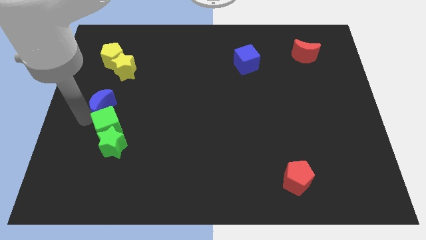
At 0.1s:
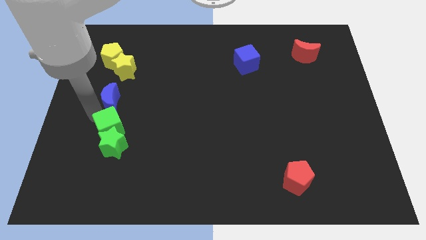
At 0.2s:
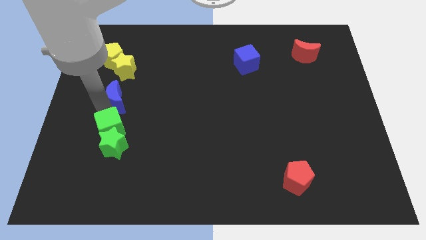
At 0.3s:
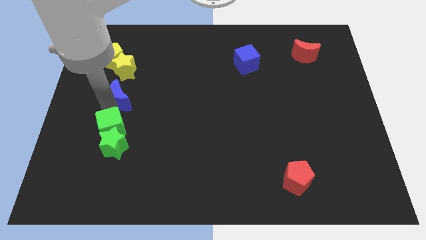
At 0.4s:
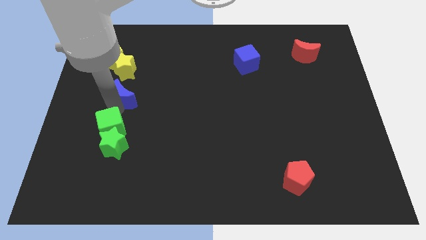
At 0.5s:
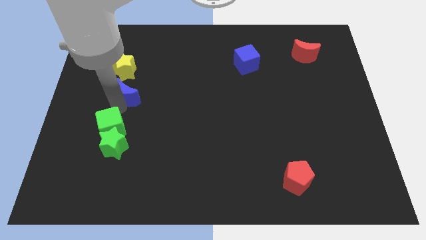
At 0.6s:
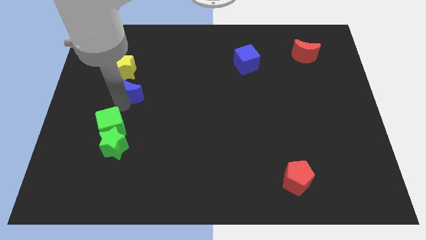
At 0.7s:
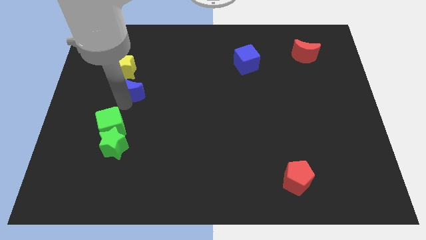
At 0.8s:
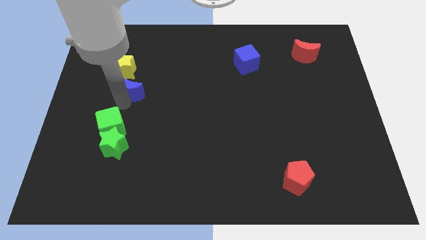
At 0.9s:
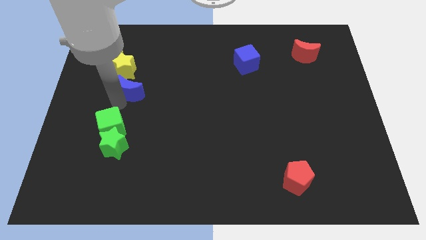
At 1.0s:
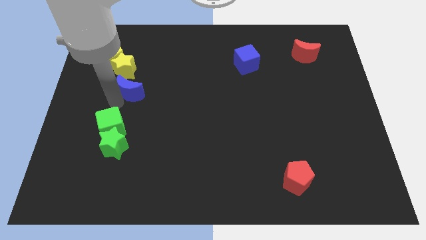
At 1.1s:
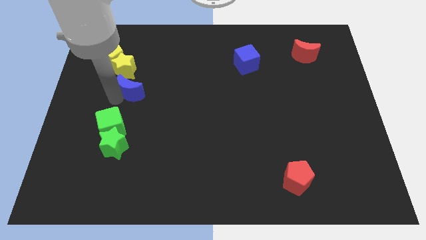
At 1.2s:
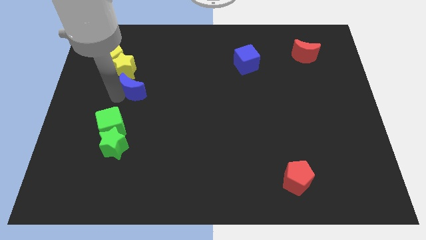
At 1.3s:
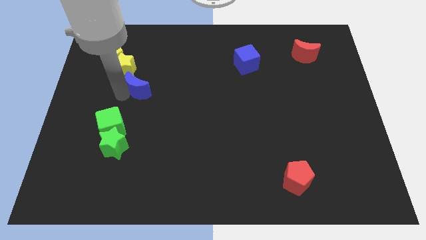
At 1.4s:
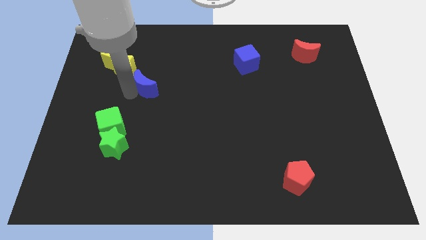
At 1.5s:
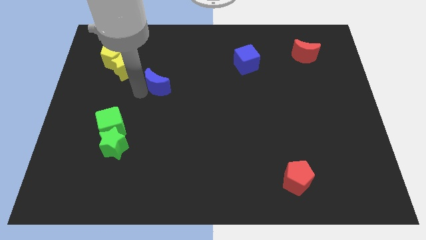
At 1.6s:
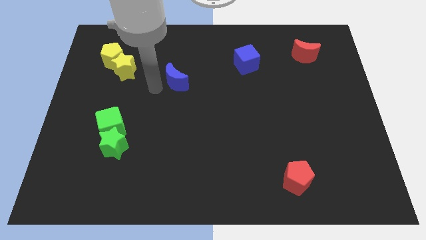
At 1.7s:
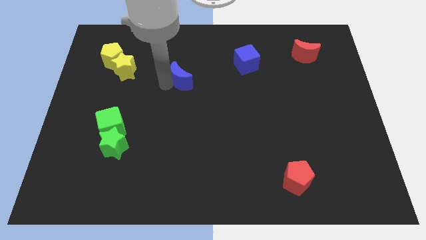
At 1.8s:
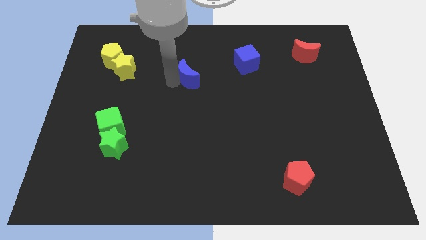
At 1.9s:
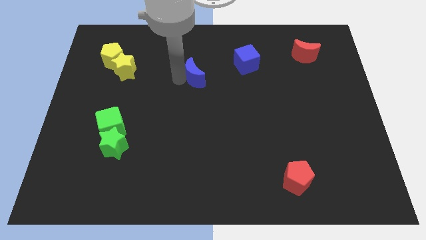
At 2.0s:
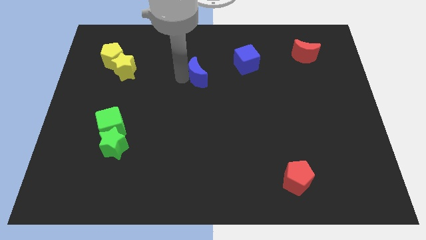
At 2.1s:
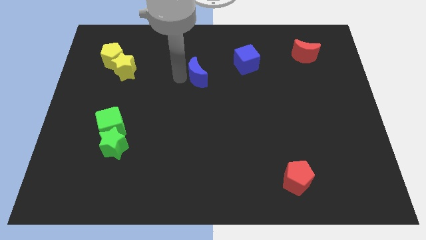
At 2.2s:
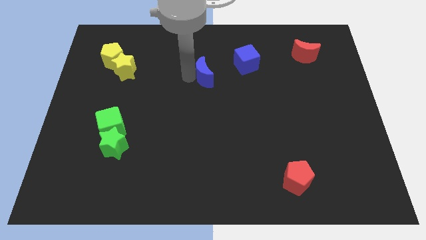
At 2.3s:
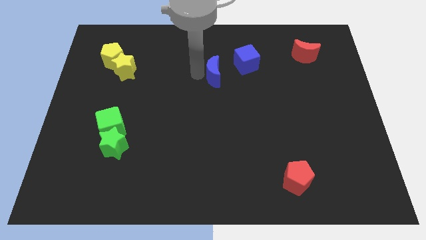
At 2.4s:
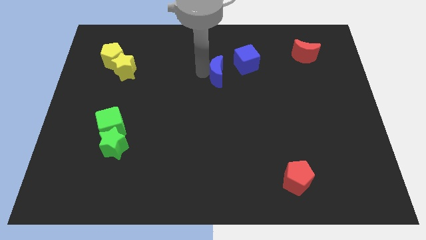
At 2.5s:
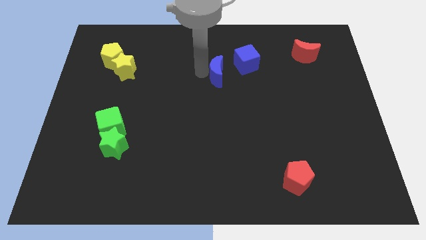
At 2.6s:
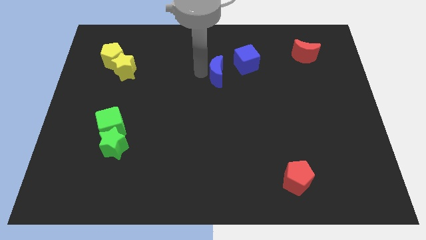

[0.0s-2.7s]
place the blue moon left to the blue cube

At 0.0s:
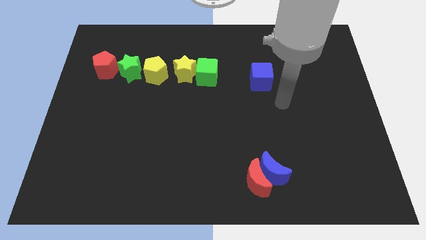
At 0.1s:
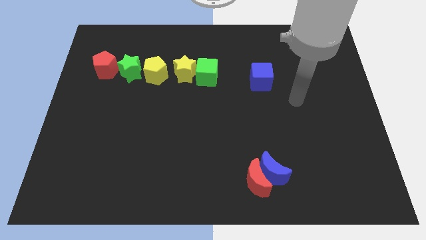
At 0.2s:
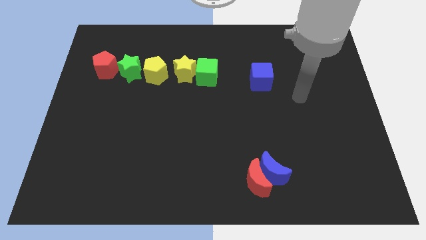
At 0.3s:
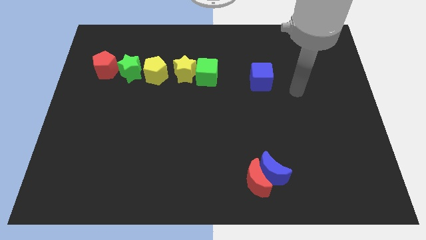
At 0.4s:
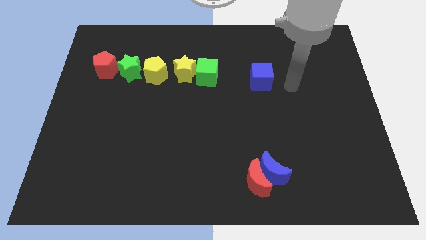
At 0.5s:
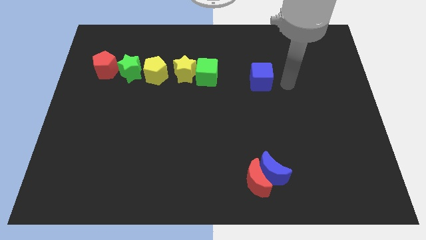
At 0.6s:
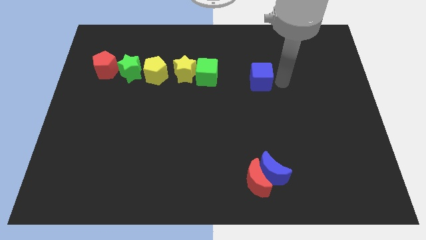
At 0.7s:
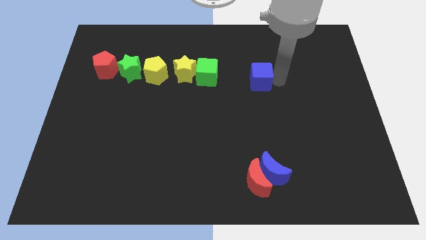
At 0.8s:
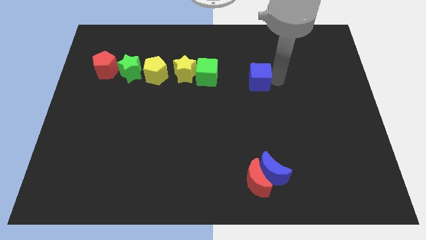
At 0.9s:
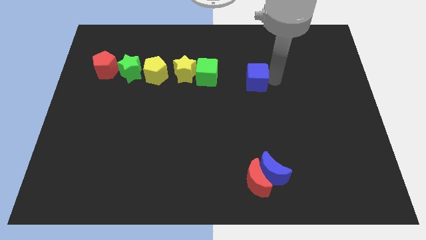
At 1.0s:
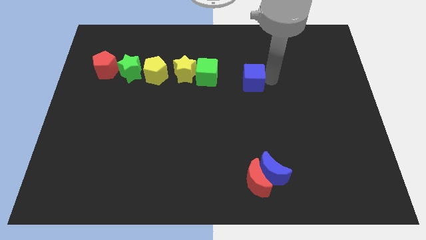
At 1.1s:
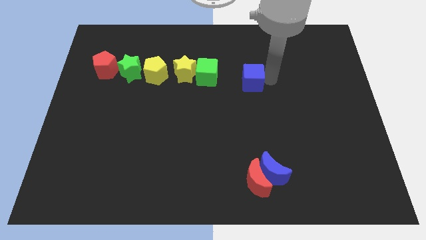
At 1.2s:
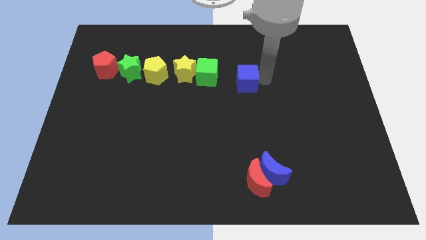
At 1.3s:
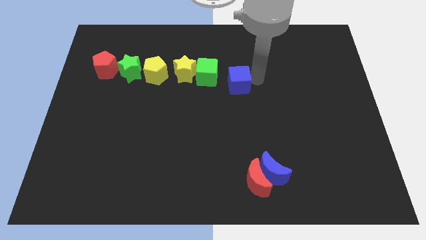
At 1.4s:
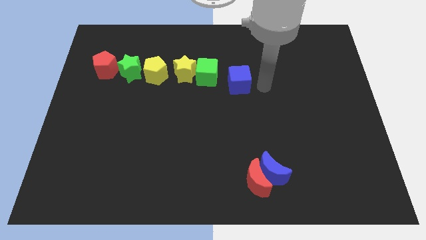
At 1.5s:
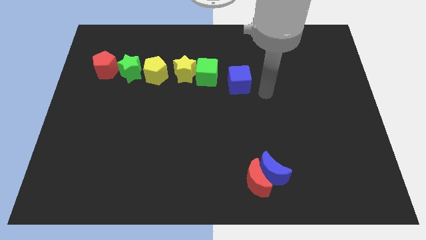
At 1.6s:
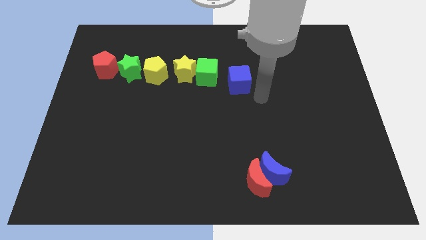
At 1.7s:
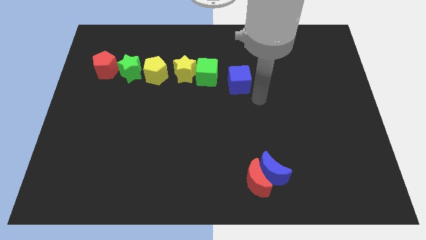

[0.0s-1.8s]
push the blue cube slightly towards the green cube

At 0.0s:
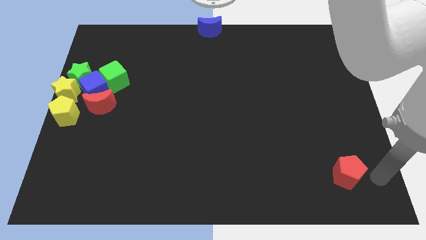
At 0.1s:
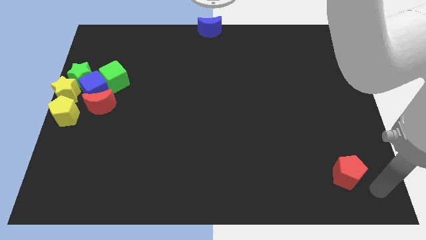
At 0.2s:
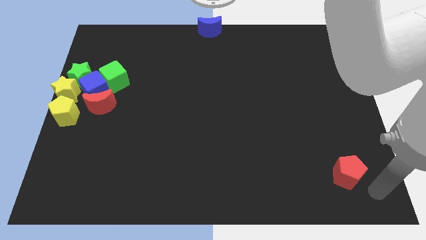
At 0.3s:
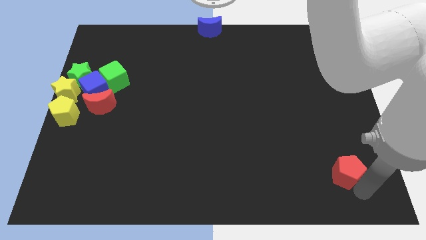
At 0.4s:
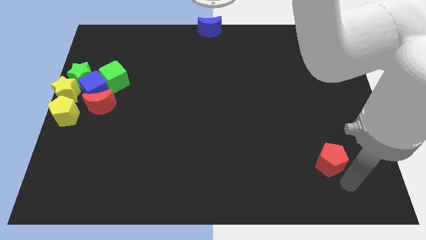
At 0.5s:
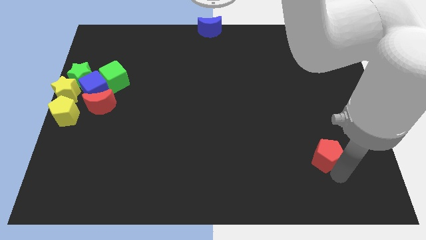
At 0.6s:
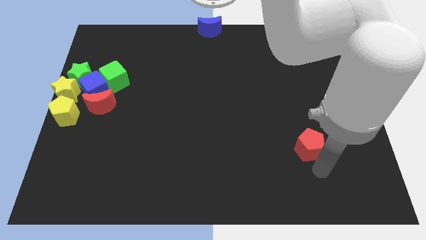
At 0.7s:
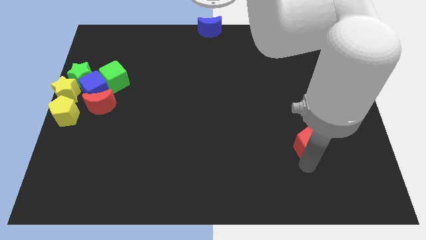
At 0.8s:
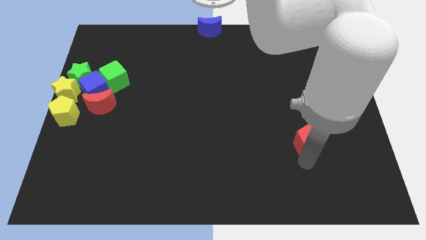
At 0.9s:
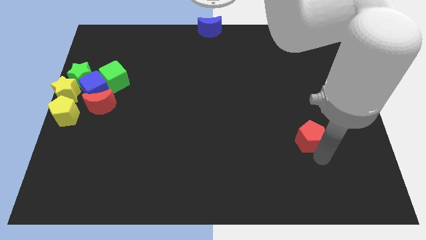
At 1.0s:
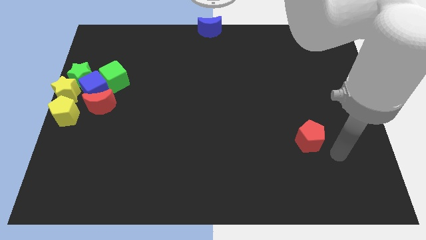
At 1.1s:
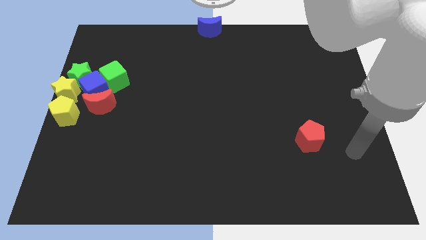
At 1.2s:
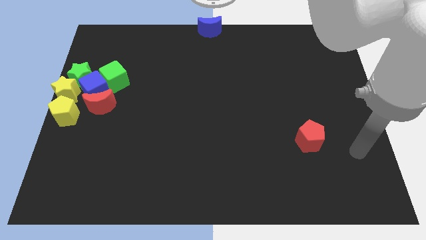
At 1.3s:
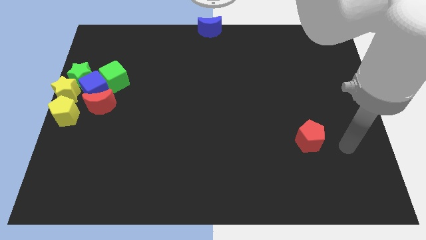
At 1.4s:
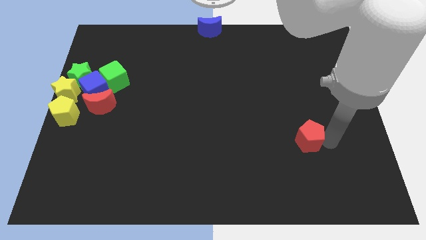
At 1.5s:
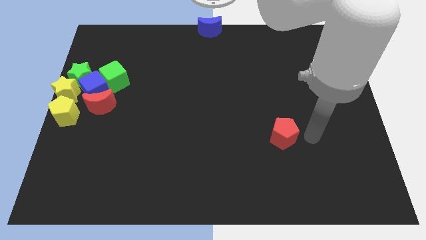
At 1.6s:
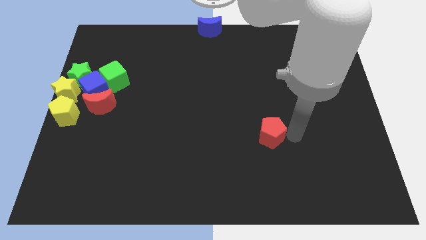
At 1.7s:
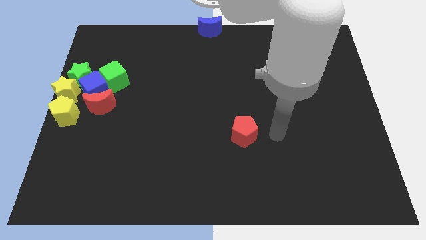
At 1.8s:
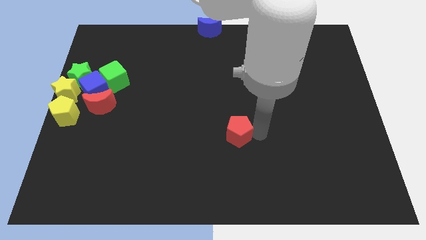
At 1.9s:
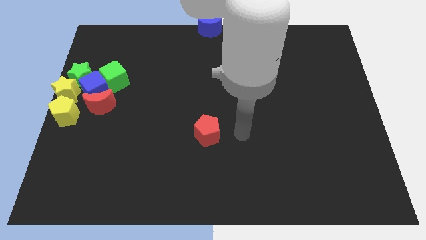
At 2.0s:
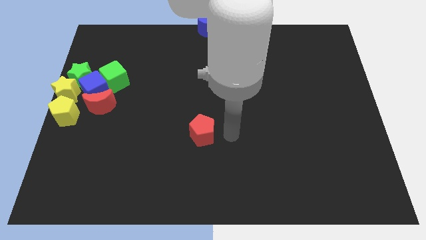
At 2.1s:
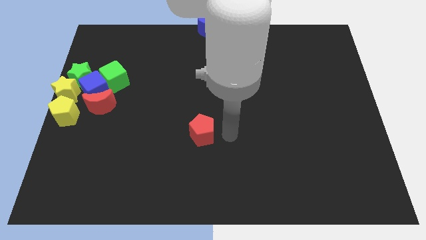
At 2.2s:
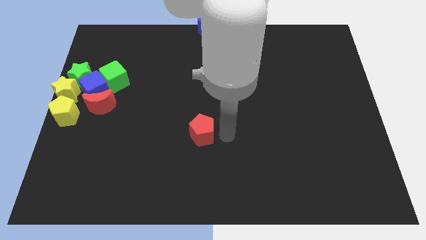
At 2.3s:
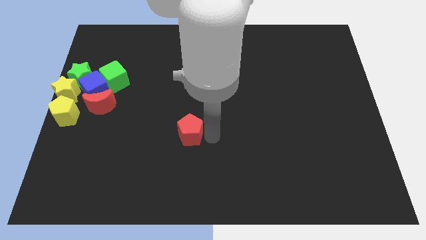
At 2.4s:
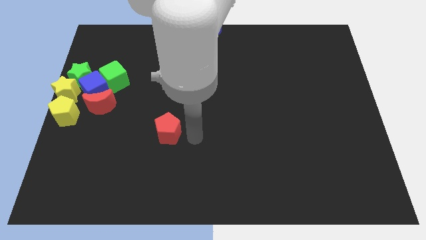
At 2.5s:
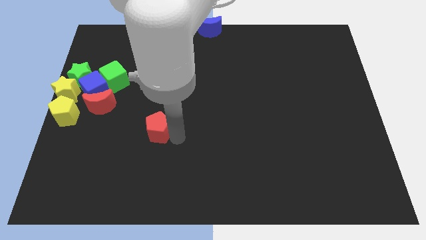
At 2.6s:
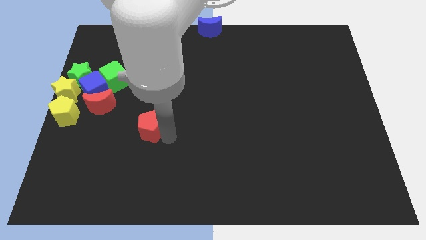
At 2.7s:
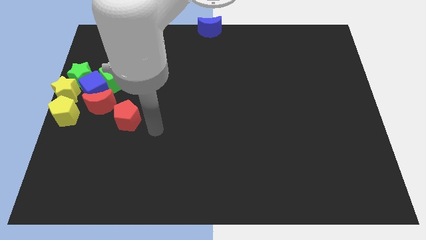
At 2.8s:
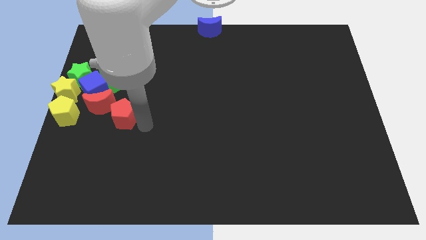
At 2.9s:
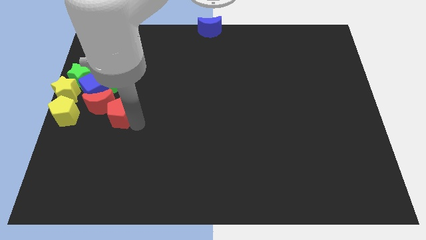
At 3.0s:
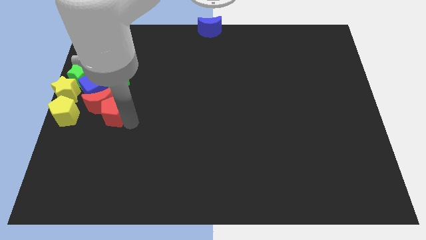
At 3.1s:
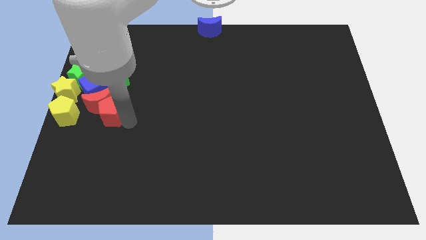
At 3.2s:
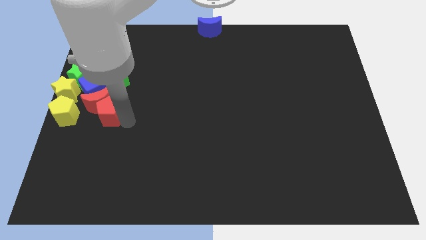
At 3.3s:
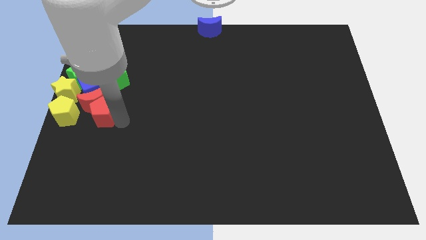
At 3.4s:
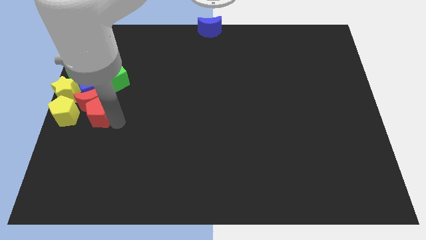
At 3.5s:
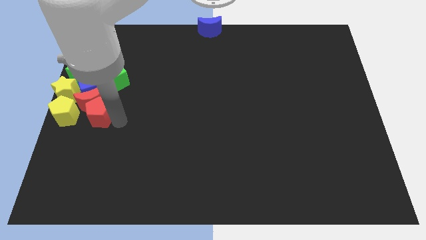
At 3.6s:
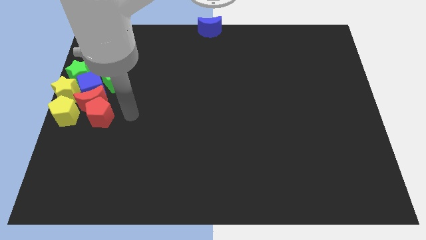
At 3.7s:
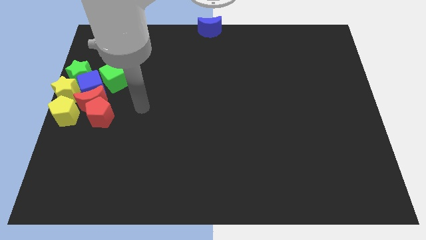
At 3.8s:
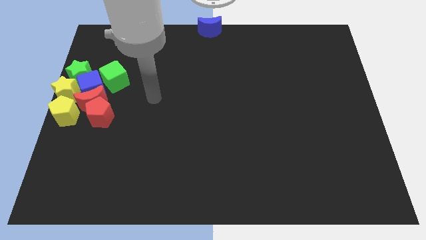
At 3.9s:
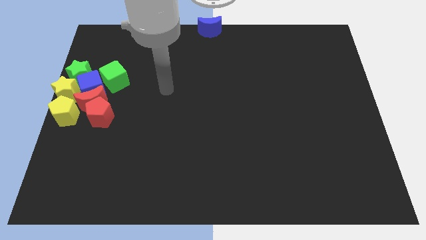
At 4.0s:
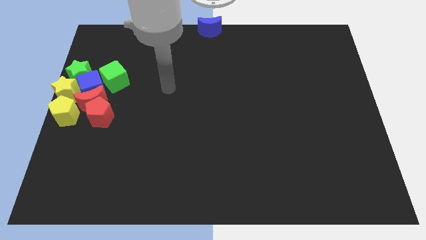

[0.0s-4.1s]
push the red pentagon into the red moon

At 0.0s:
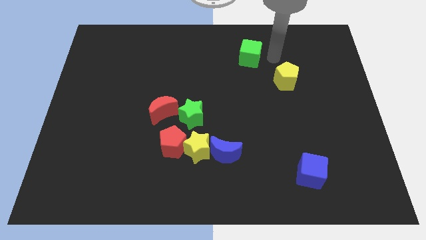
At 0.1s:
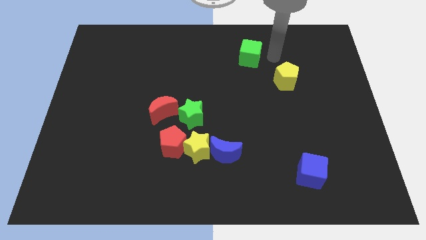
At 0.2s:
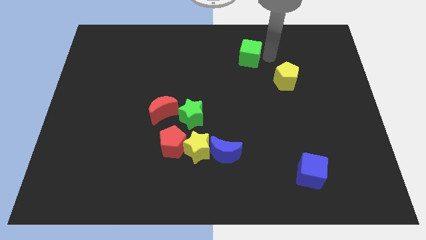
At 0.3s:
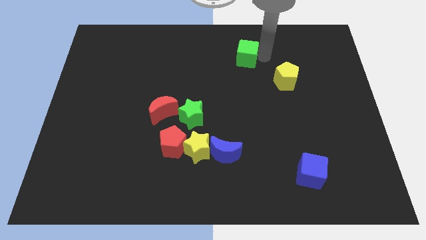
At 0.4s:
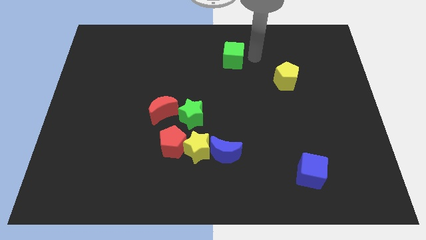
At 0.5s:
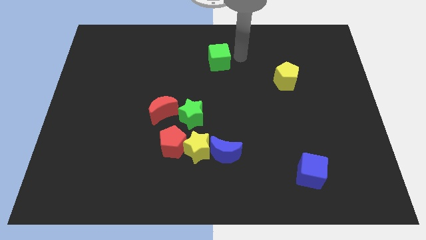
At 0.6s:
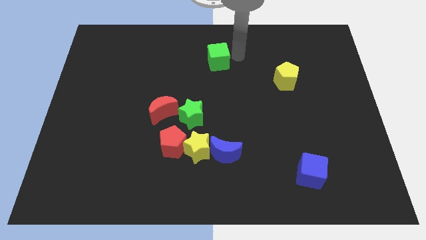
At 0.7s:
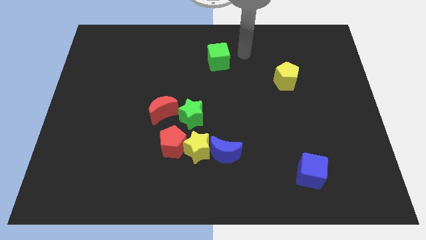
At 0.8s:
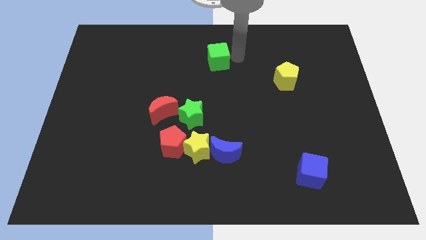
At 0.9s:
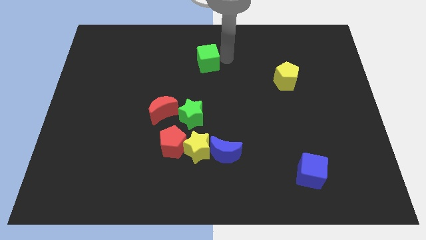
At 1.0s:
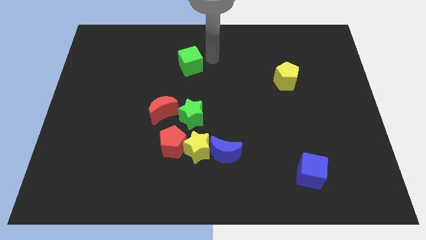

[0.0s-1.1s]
push the green cube above the green star
